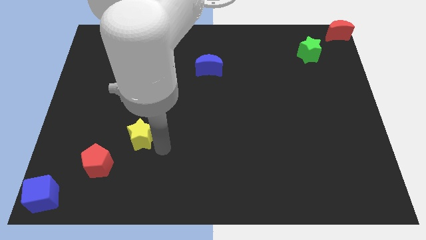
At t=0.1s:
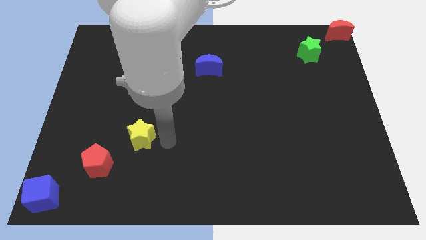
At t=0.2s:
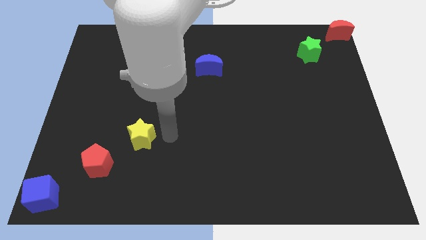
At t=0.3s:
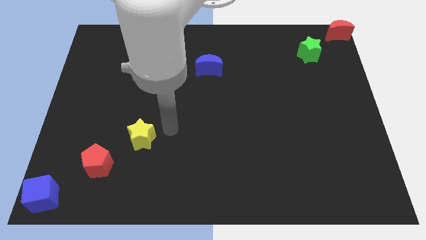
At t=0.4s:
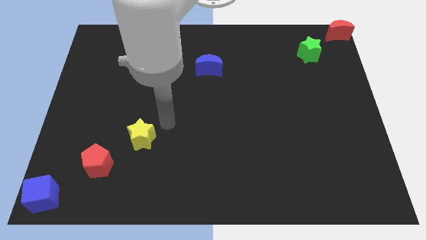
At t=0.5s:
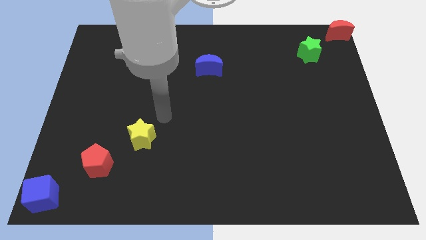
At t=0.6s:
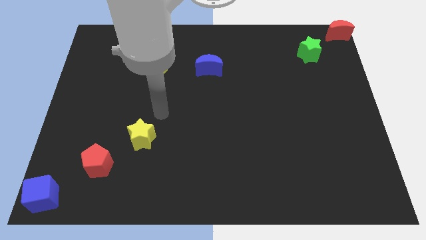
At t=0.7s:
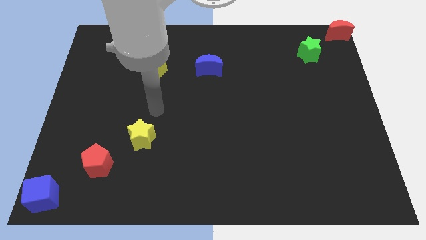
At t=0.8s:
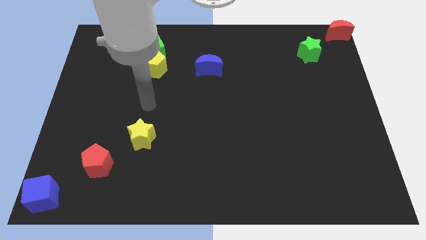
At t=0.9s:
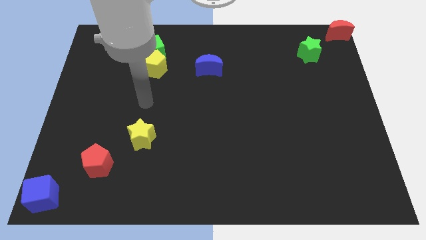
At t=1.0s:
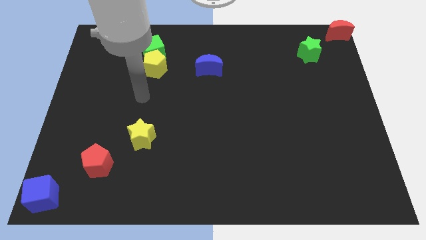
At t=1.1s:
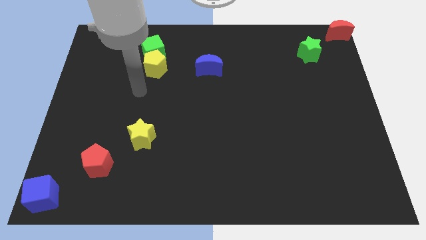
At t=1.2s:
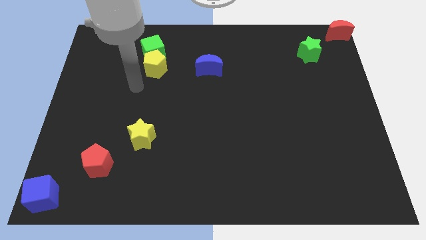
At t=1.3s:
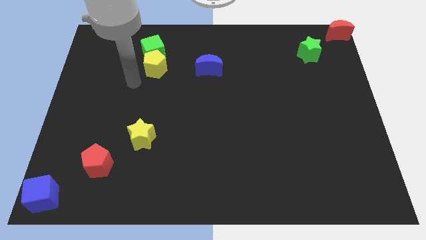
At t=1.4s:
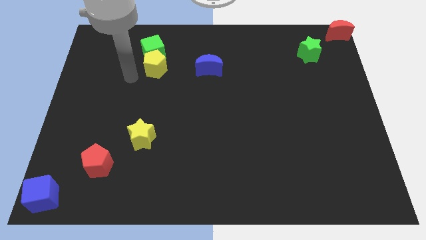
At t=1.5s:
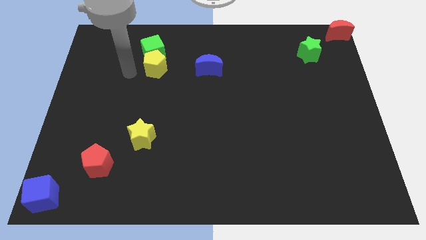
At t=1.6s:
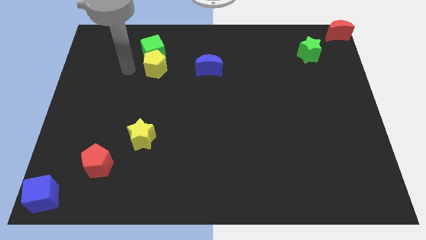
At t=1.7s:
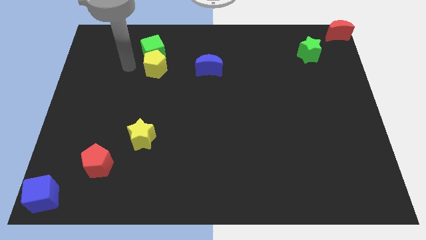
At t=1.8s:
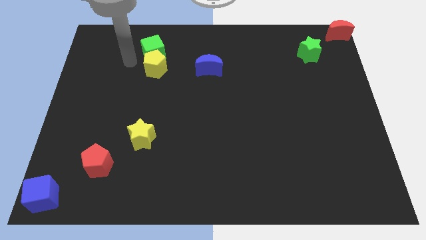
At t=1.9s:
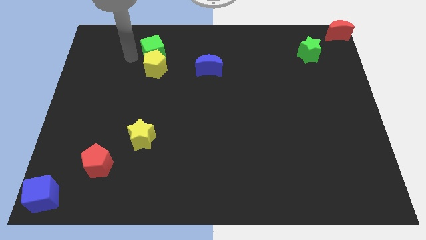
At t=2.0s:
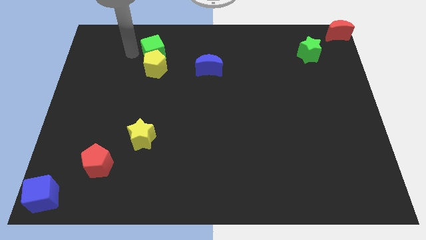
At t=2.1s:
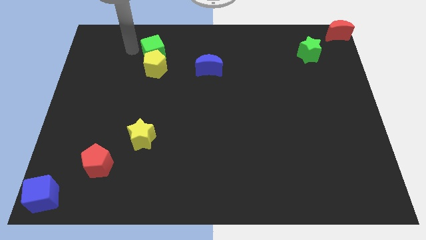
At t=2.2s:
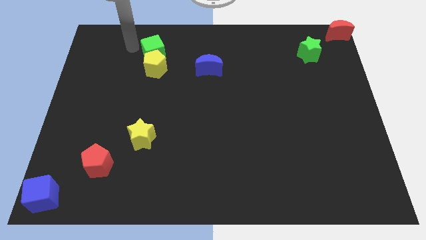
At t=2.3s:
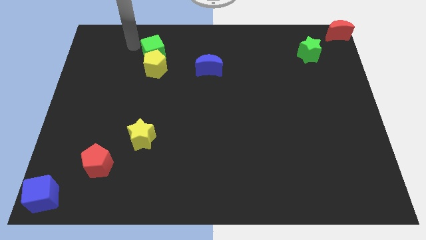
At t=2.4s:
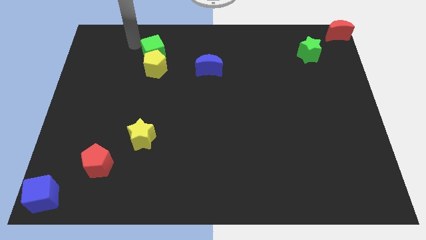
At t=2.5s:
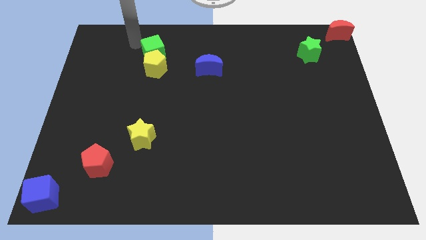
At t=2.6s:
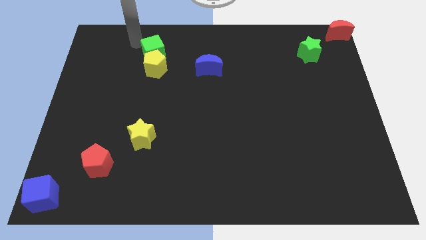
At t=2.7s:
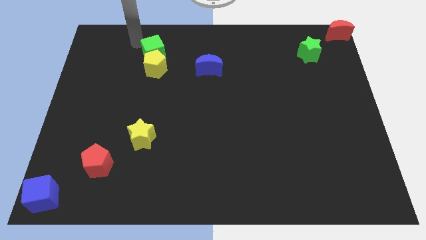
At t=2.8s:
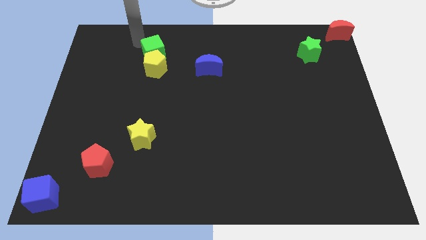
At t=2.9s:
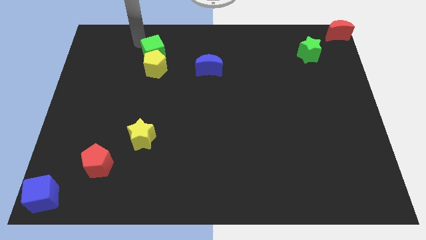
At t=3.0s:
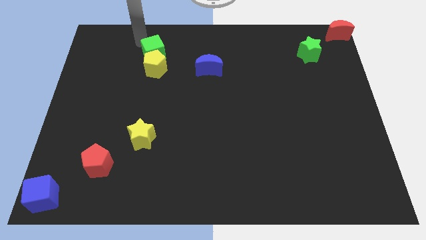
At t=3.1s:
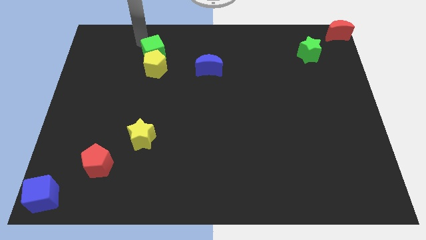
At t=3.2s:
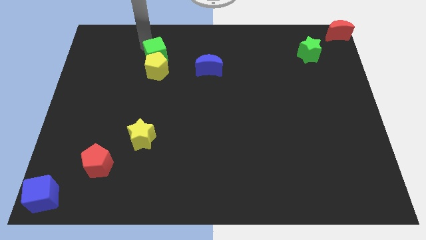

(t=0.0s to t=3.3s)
point your arm on top of green cube

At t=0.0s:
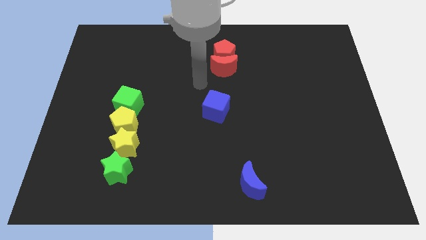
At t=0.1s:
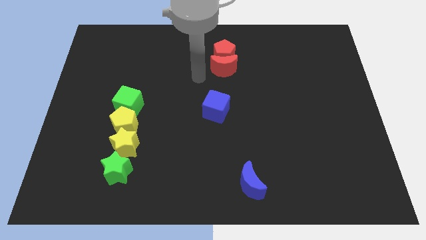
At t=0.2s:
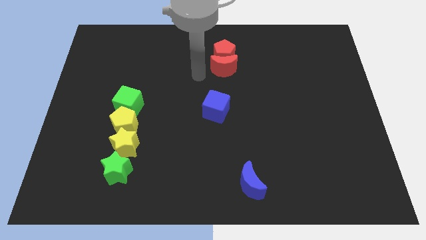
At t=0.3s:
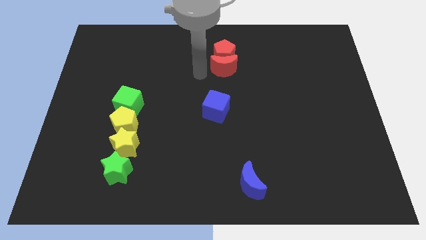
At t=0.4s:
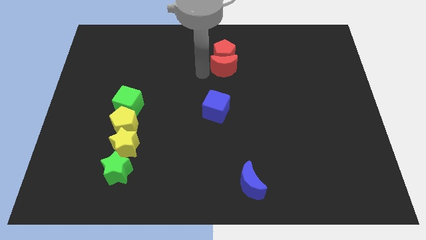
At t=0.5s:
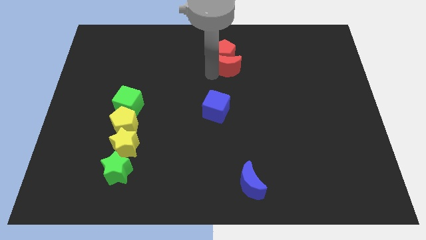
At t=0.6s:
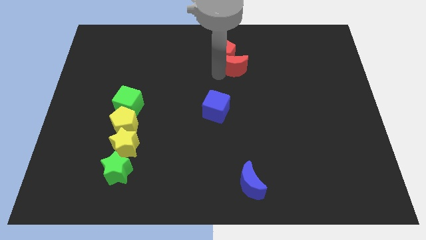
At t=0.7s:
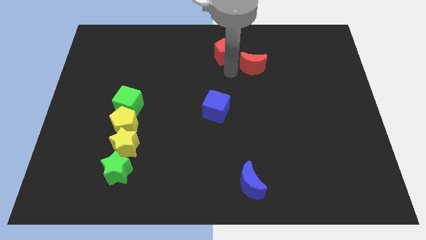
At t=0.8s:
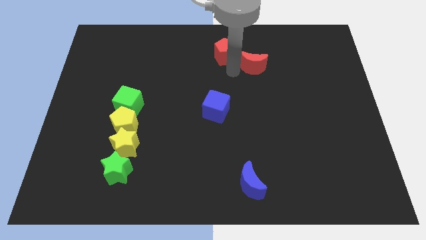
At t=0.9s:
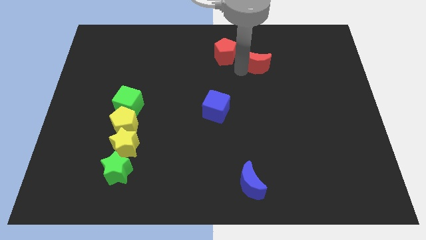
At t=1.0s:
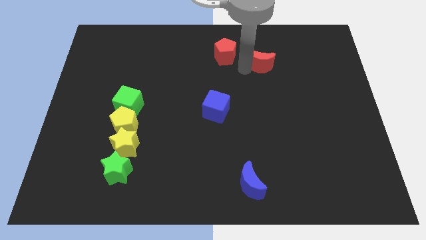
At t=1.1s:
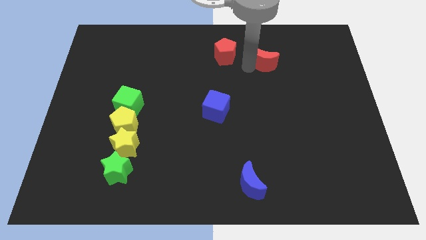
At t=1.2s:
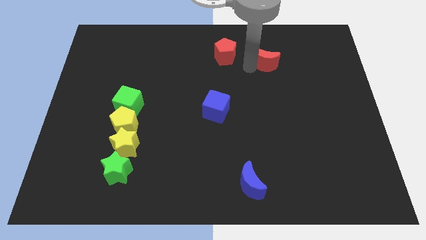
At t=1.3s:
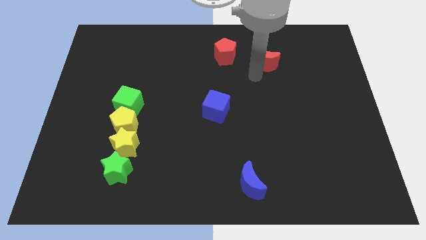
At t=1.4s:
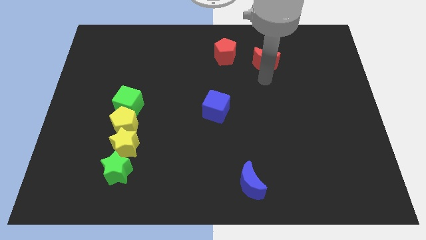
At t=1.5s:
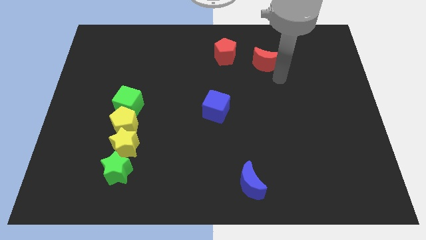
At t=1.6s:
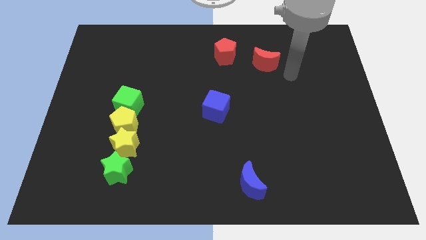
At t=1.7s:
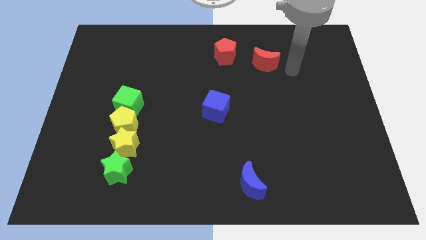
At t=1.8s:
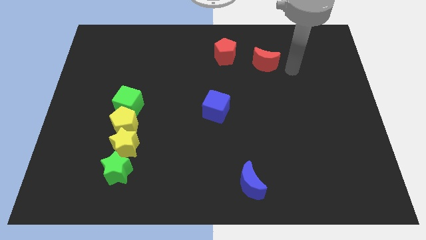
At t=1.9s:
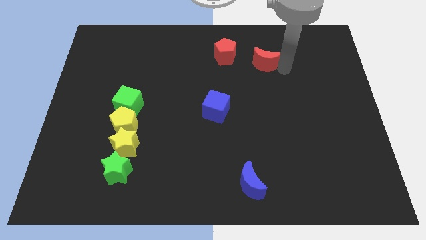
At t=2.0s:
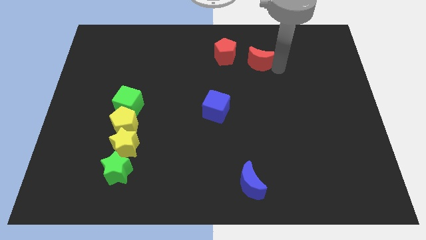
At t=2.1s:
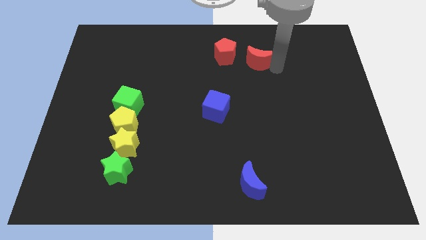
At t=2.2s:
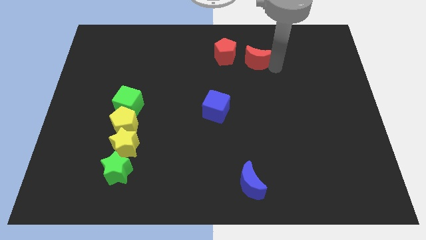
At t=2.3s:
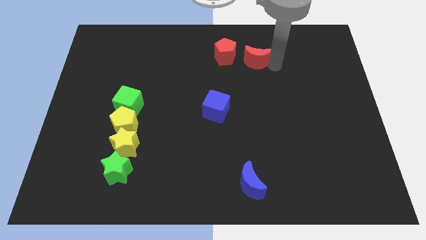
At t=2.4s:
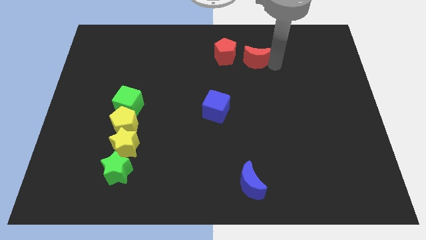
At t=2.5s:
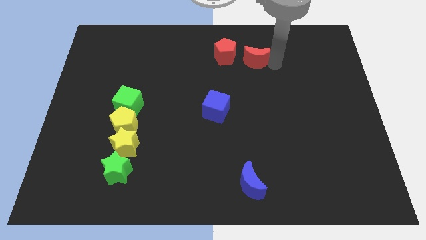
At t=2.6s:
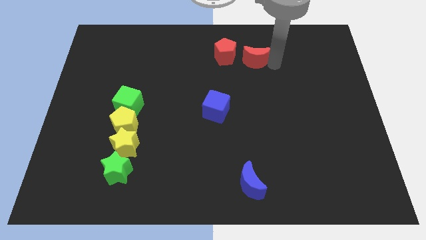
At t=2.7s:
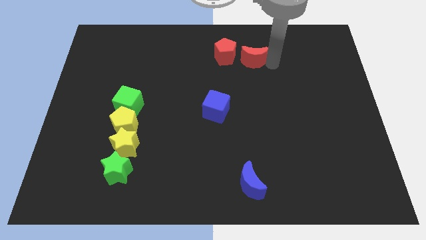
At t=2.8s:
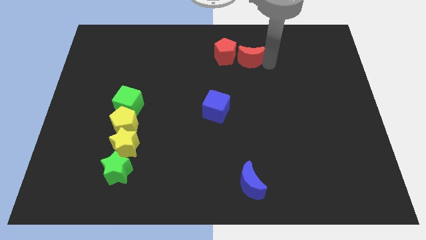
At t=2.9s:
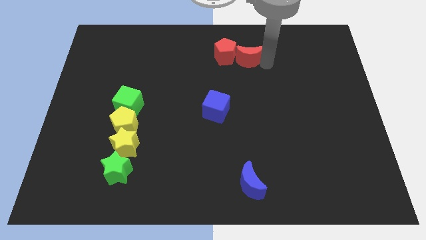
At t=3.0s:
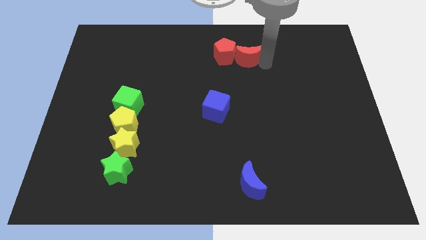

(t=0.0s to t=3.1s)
put the red moon to the right of the red pentagon

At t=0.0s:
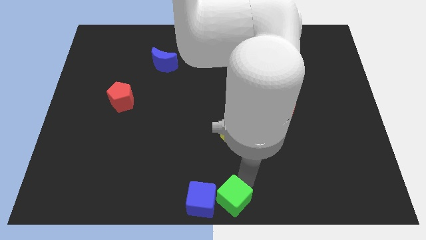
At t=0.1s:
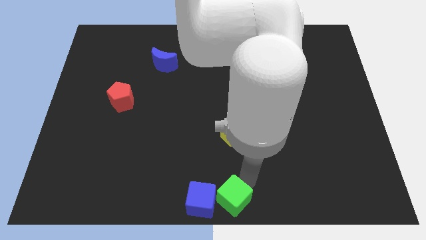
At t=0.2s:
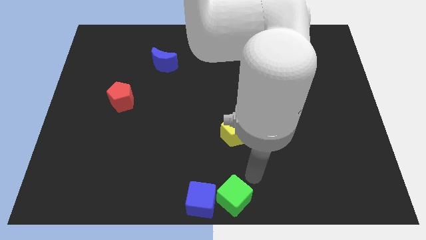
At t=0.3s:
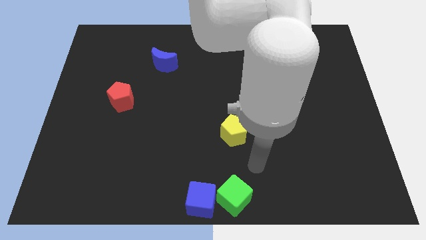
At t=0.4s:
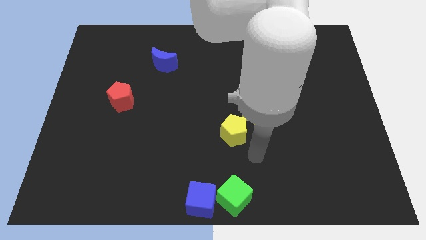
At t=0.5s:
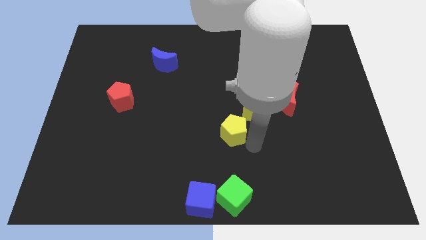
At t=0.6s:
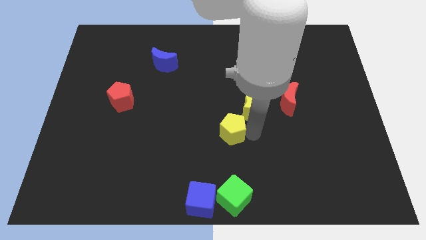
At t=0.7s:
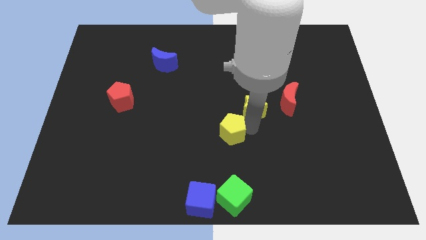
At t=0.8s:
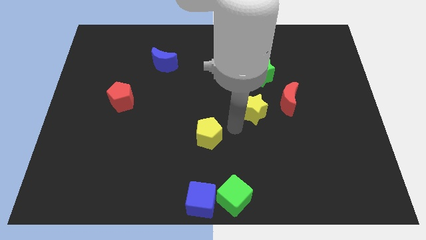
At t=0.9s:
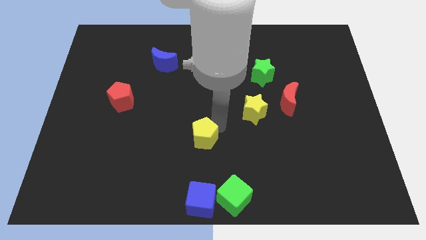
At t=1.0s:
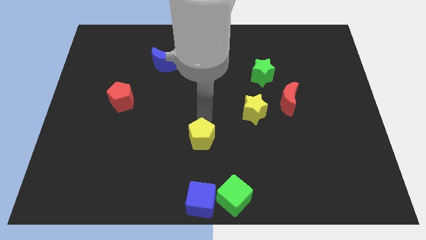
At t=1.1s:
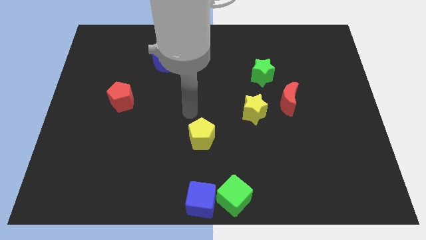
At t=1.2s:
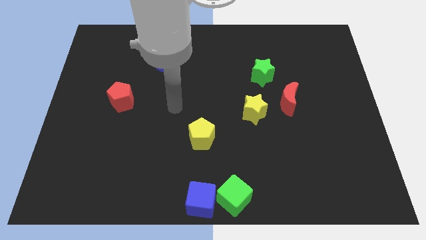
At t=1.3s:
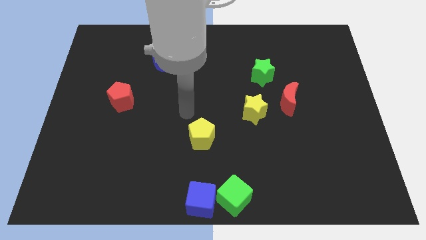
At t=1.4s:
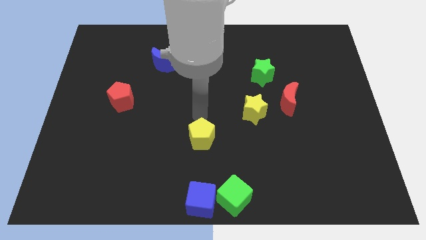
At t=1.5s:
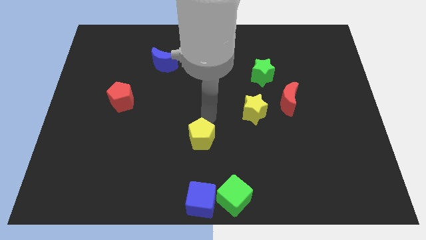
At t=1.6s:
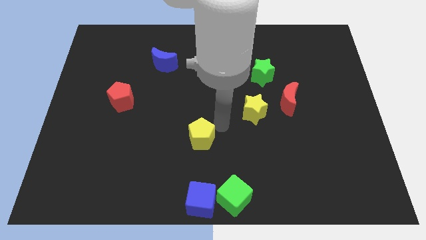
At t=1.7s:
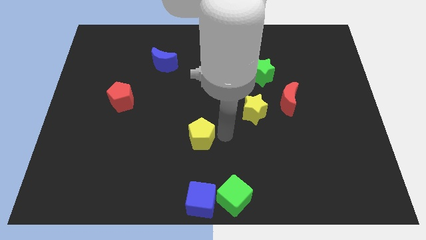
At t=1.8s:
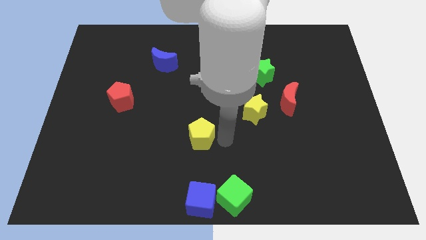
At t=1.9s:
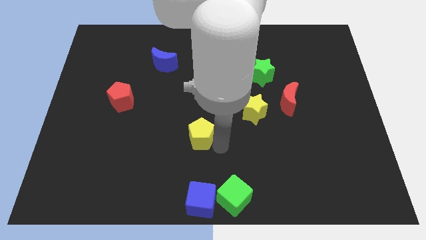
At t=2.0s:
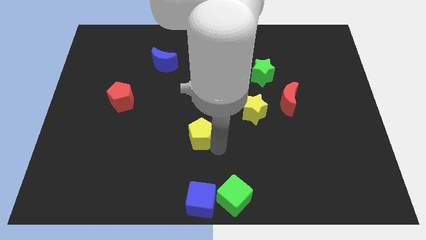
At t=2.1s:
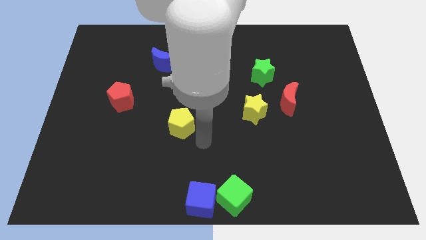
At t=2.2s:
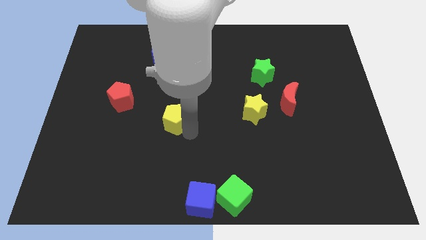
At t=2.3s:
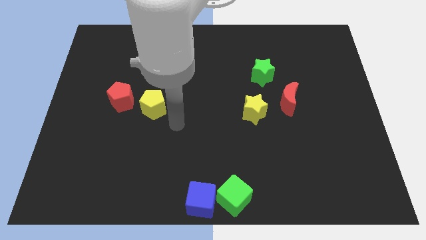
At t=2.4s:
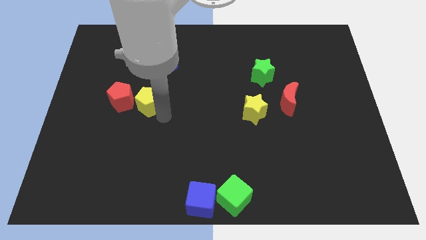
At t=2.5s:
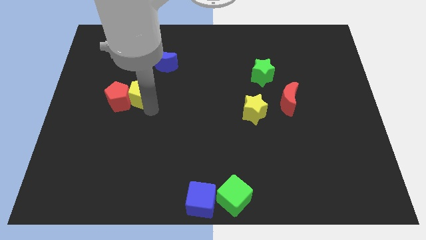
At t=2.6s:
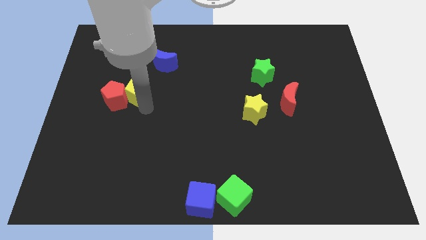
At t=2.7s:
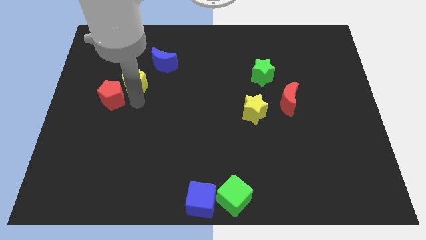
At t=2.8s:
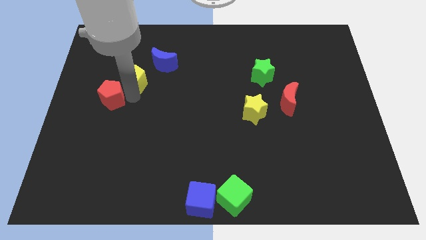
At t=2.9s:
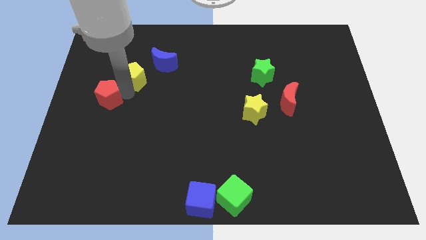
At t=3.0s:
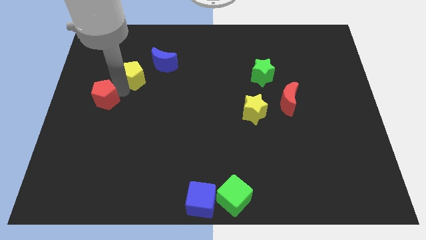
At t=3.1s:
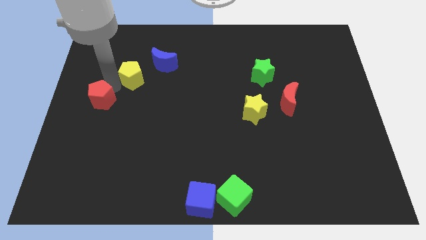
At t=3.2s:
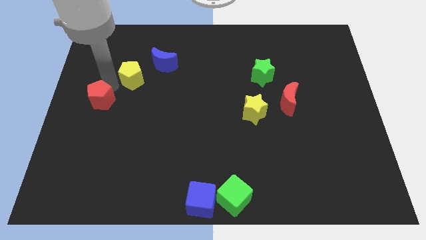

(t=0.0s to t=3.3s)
place the yellow pentagon in between the red pentagon and blue moon
